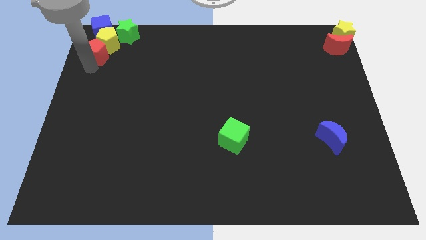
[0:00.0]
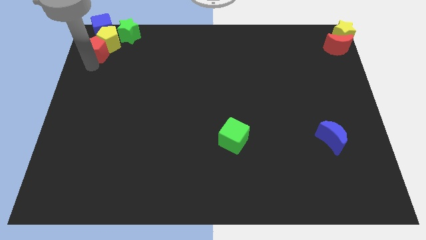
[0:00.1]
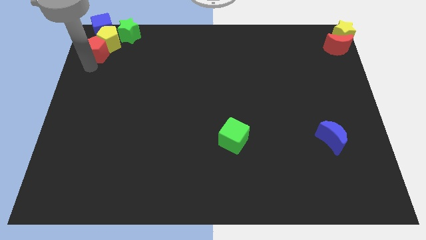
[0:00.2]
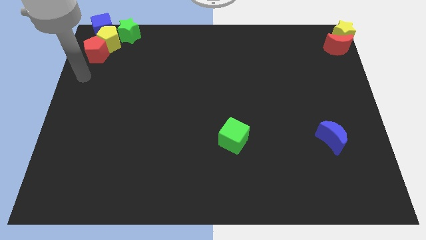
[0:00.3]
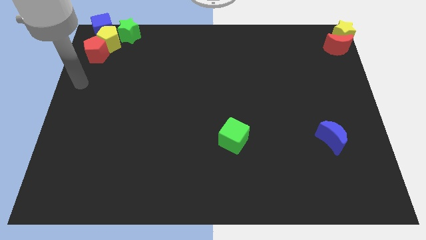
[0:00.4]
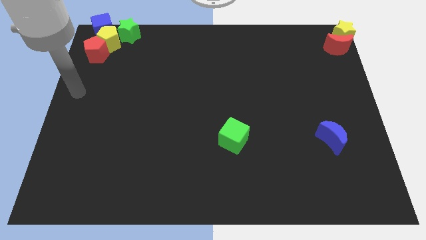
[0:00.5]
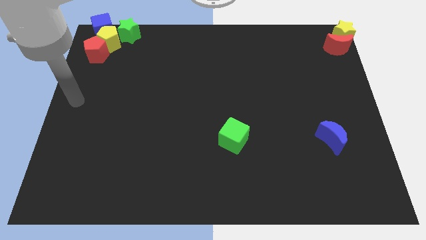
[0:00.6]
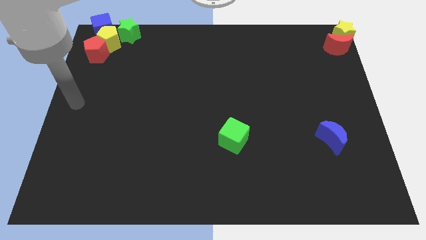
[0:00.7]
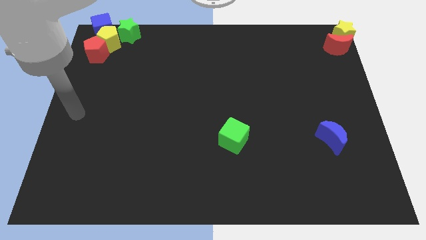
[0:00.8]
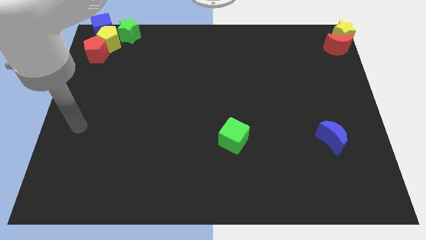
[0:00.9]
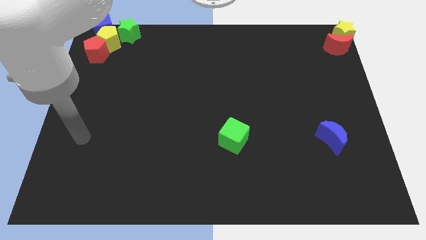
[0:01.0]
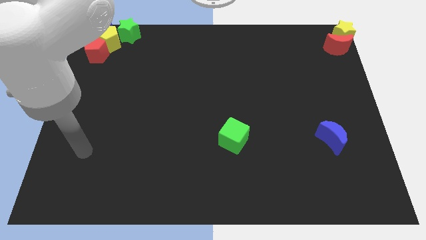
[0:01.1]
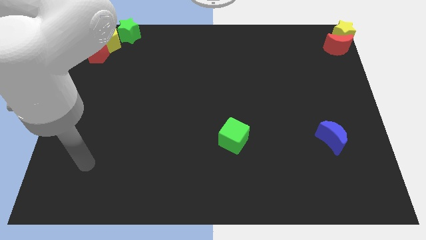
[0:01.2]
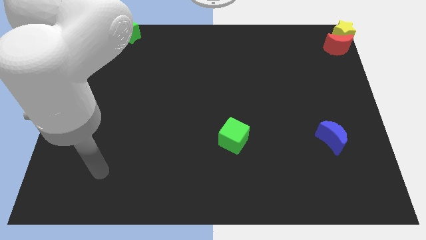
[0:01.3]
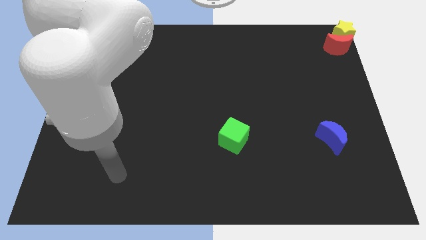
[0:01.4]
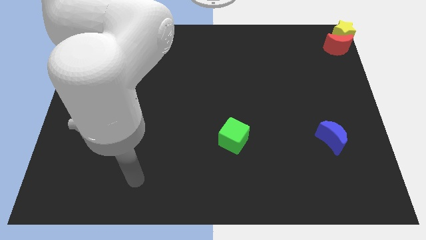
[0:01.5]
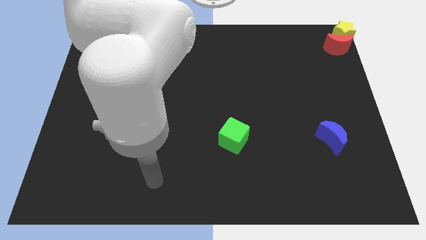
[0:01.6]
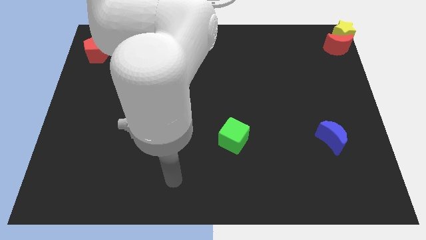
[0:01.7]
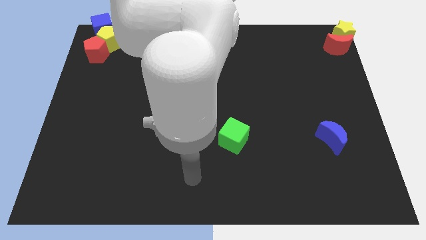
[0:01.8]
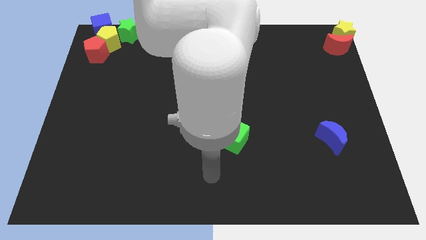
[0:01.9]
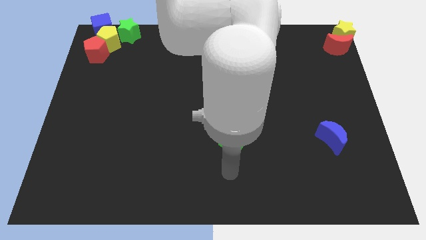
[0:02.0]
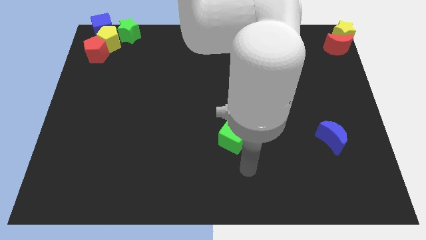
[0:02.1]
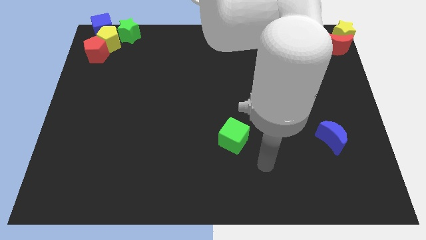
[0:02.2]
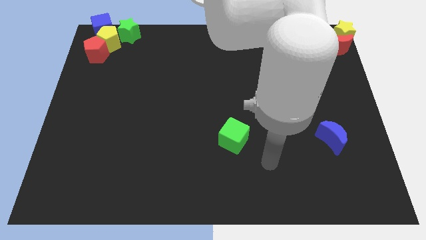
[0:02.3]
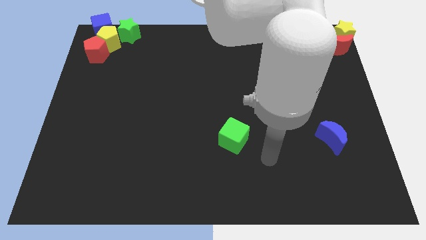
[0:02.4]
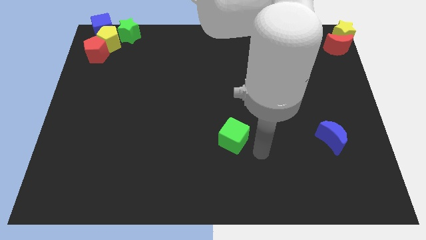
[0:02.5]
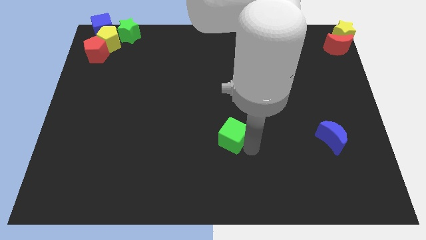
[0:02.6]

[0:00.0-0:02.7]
move the arm away from the red pentagon

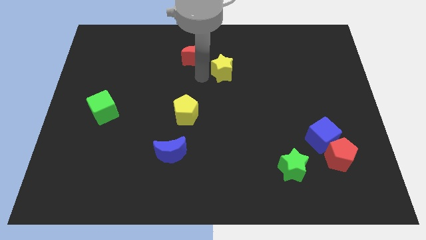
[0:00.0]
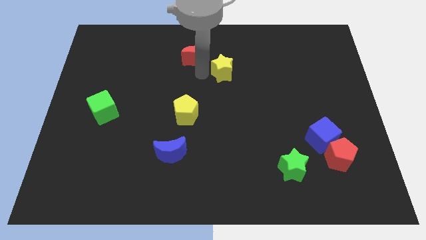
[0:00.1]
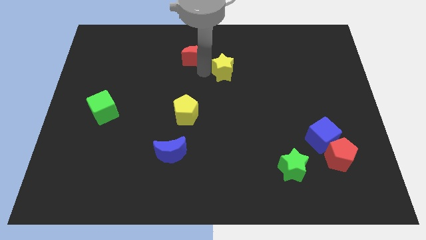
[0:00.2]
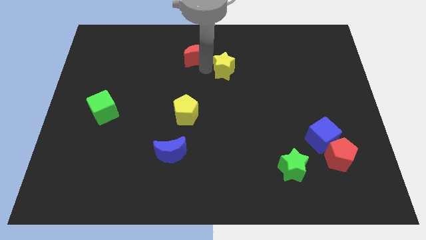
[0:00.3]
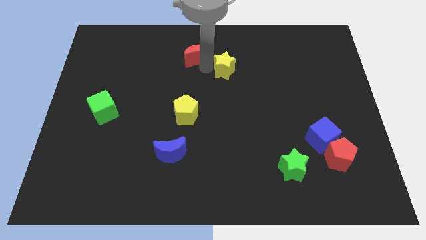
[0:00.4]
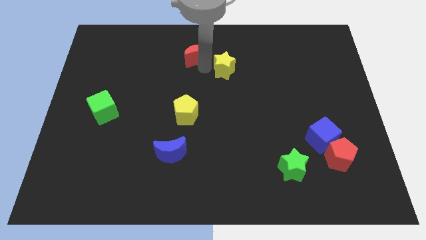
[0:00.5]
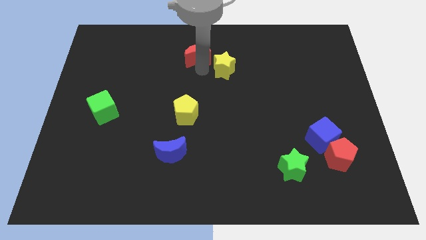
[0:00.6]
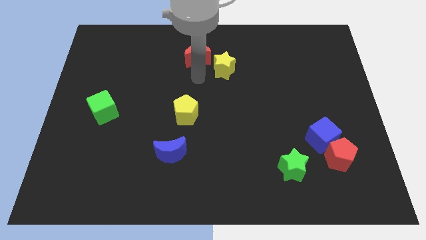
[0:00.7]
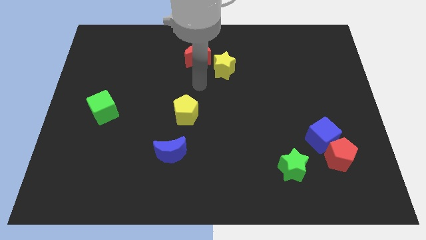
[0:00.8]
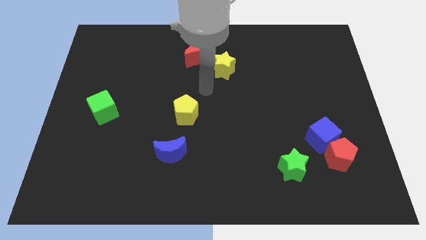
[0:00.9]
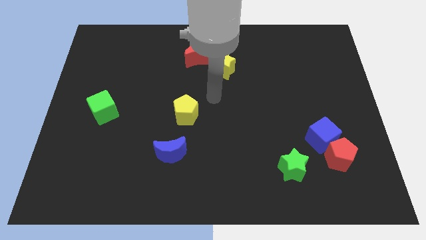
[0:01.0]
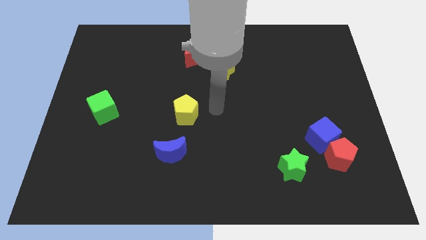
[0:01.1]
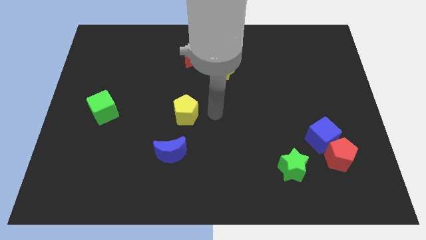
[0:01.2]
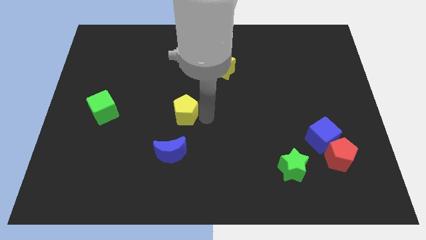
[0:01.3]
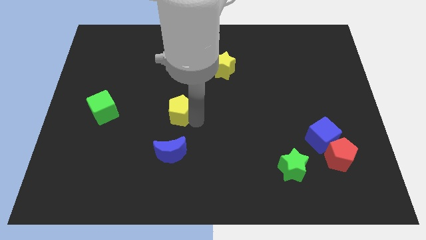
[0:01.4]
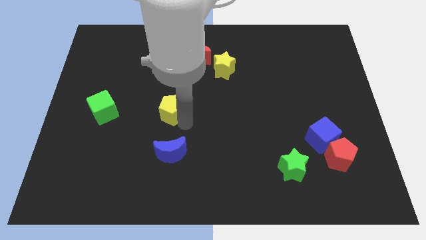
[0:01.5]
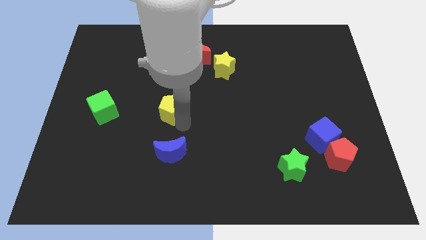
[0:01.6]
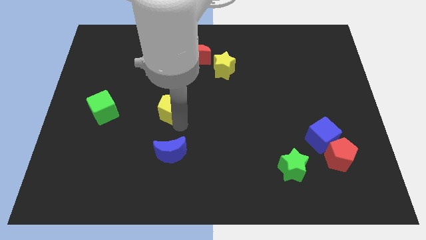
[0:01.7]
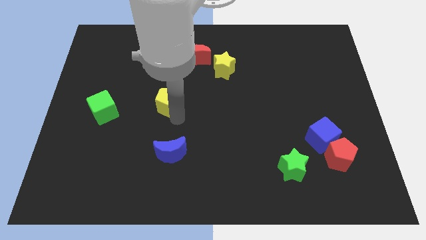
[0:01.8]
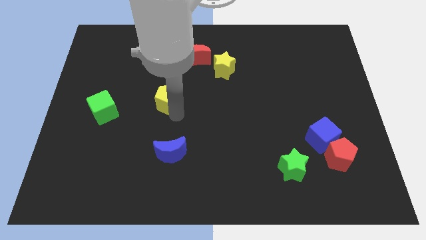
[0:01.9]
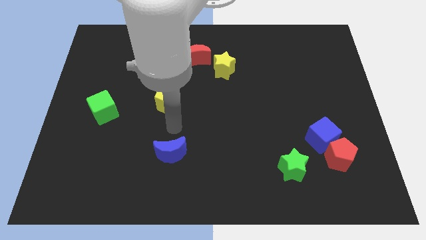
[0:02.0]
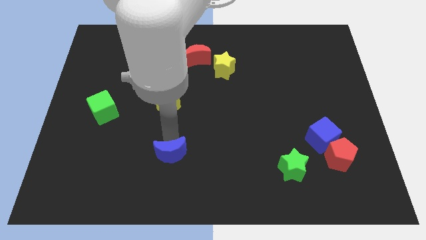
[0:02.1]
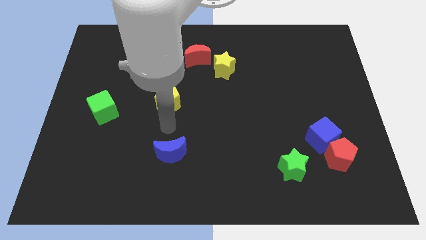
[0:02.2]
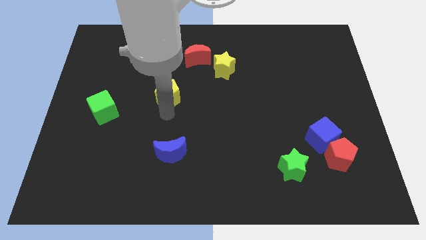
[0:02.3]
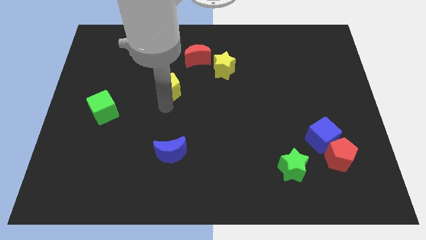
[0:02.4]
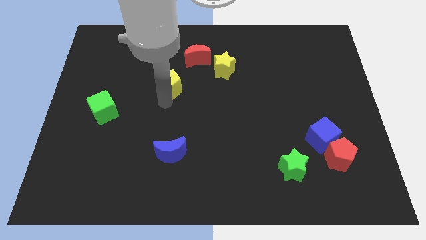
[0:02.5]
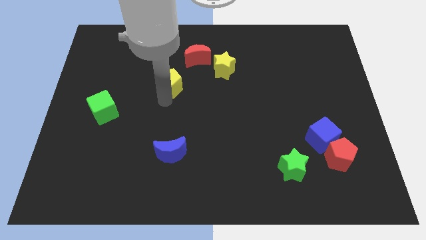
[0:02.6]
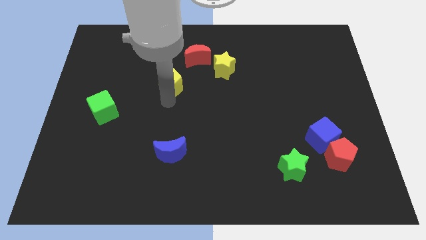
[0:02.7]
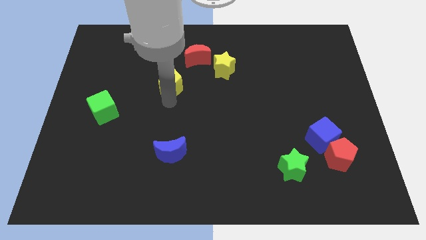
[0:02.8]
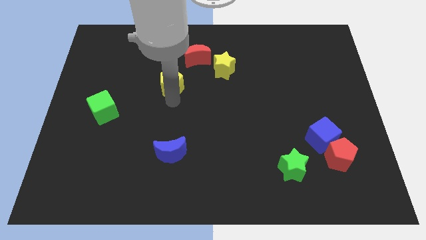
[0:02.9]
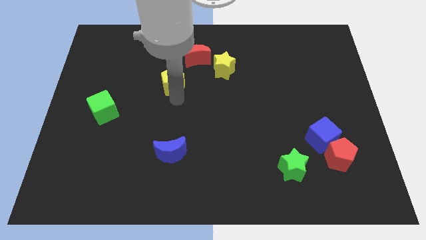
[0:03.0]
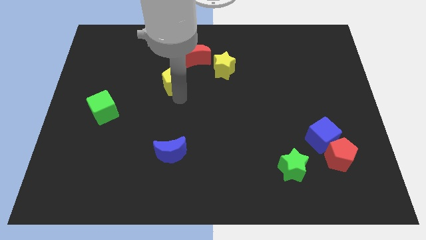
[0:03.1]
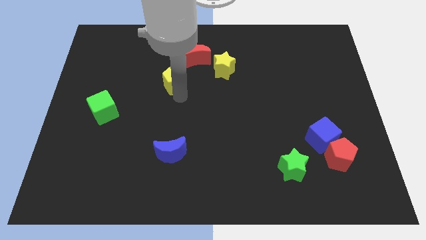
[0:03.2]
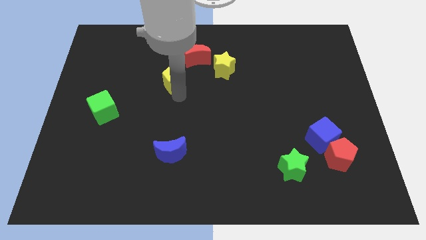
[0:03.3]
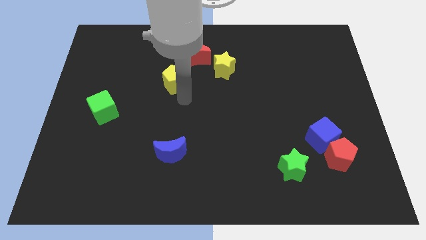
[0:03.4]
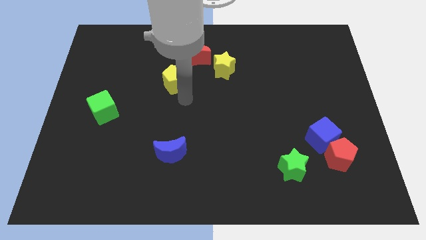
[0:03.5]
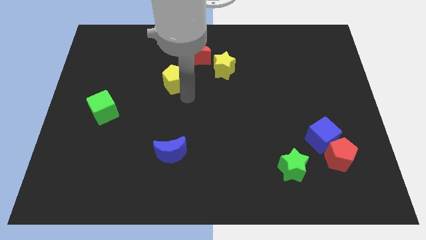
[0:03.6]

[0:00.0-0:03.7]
move the yellow pentagon to the bottom left of the red crescent

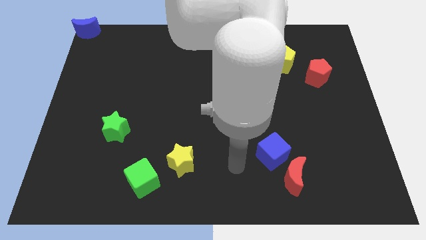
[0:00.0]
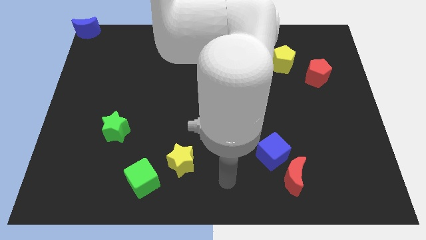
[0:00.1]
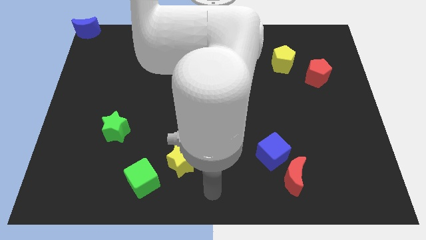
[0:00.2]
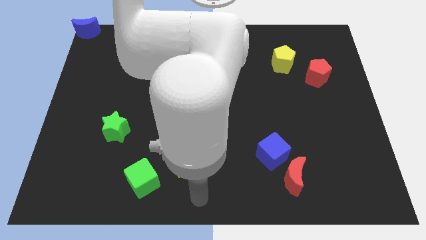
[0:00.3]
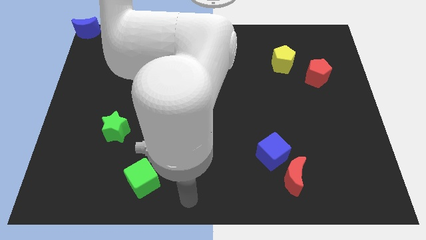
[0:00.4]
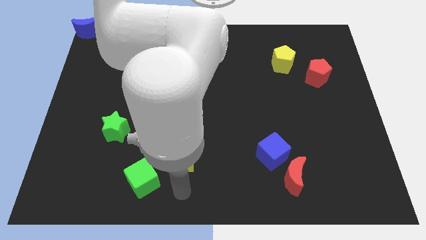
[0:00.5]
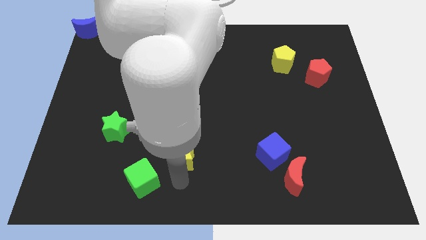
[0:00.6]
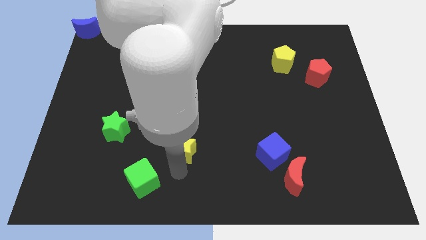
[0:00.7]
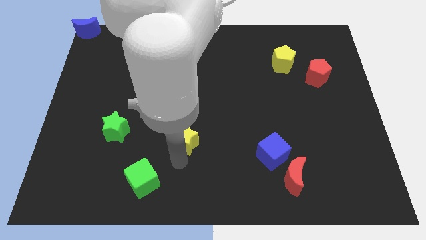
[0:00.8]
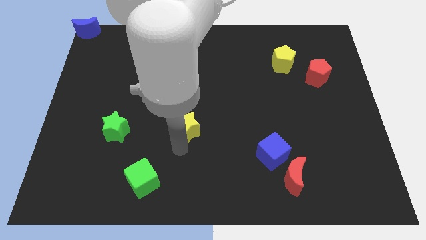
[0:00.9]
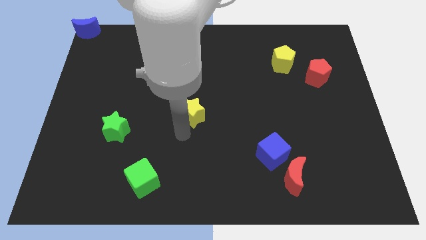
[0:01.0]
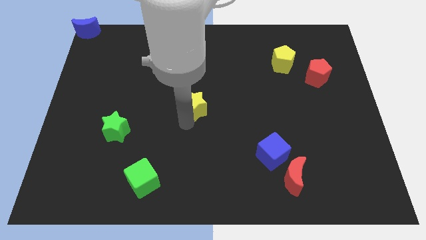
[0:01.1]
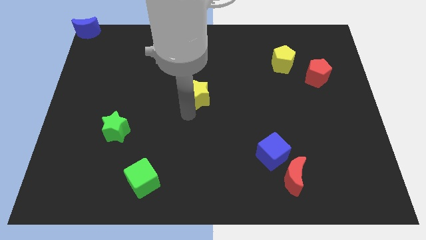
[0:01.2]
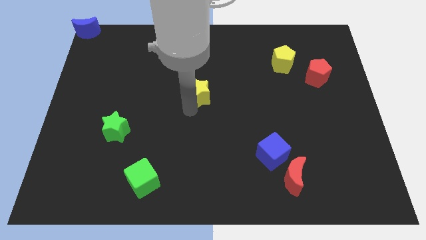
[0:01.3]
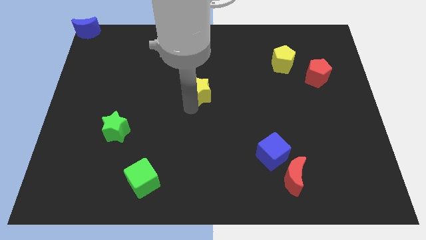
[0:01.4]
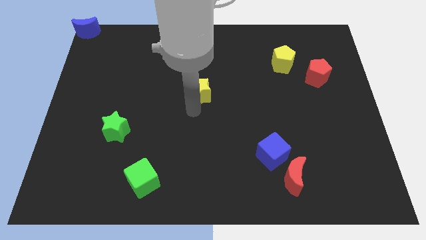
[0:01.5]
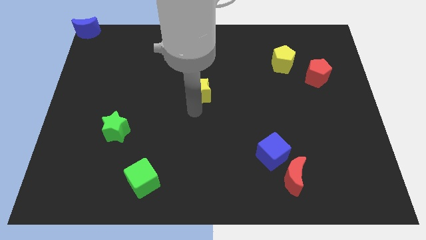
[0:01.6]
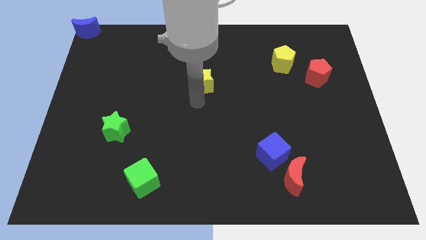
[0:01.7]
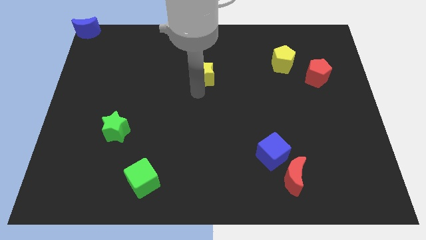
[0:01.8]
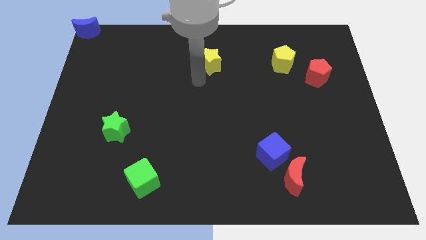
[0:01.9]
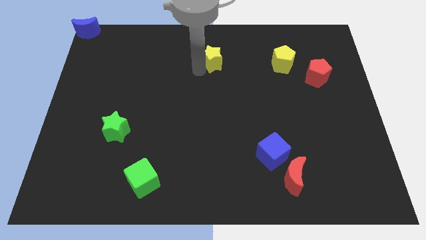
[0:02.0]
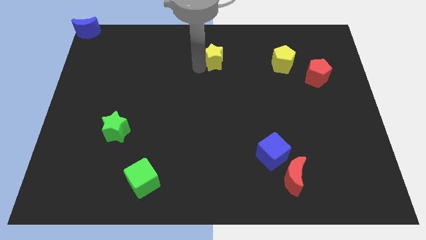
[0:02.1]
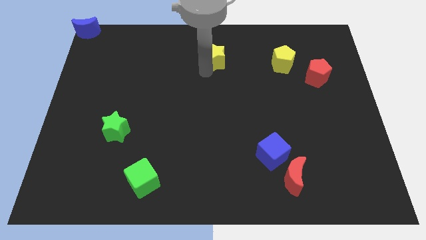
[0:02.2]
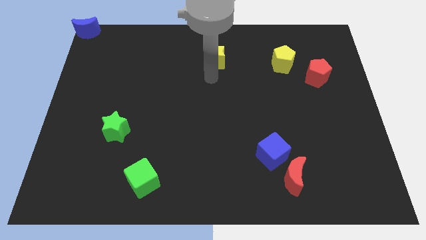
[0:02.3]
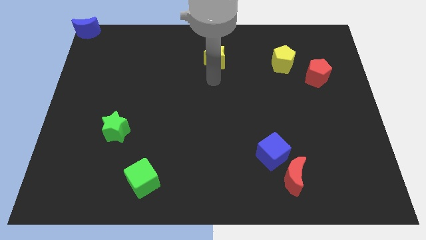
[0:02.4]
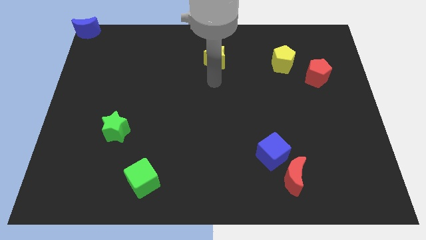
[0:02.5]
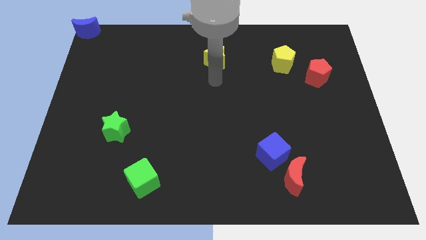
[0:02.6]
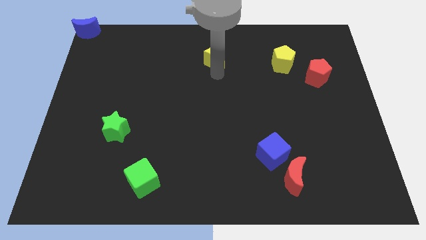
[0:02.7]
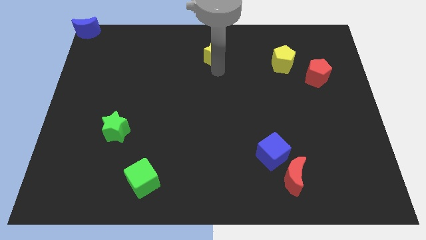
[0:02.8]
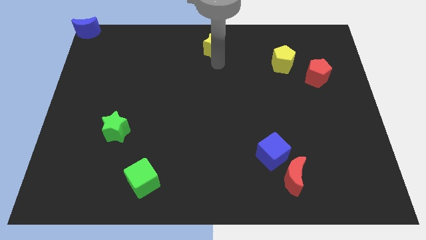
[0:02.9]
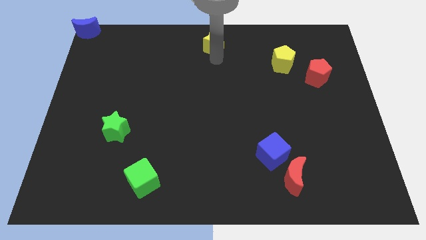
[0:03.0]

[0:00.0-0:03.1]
push yellow star towards top center
